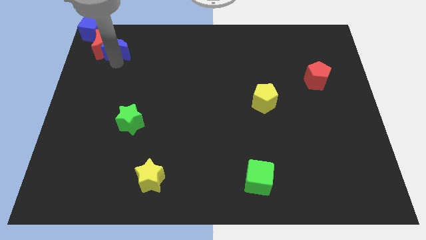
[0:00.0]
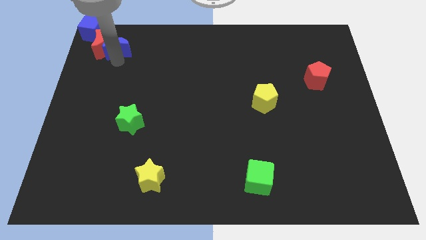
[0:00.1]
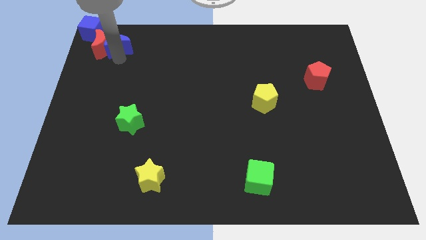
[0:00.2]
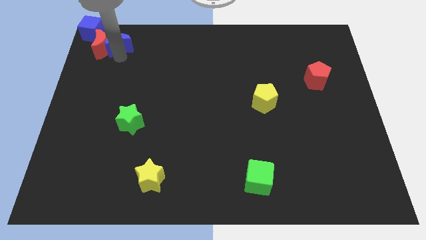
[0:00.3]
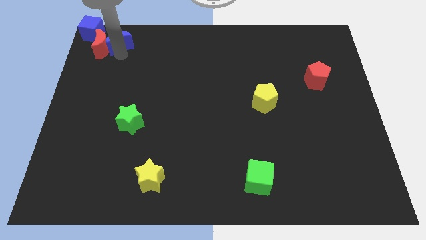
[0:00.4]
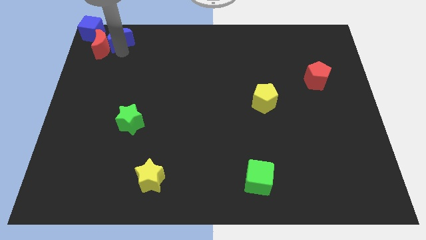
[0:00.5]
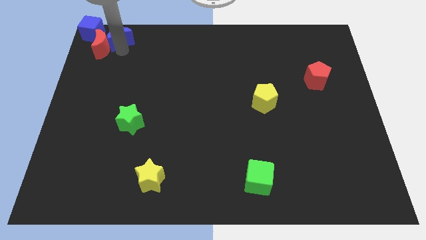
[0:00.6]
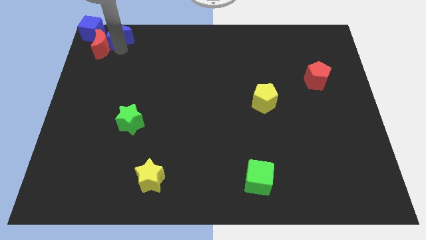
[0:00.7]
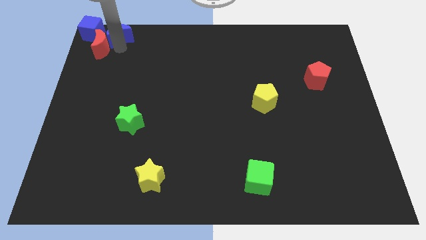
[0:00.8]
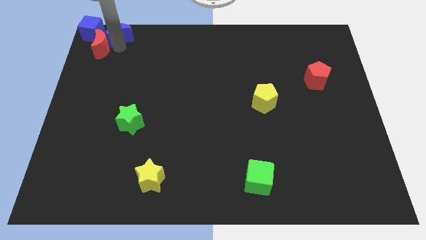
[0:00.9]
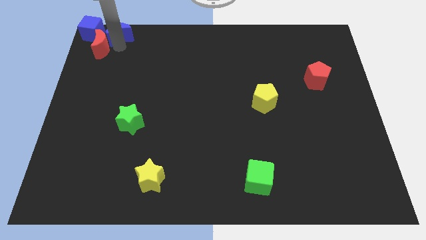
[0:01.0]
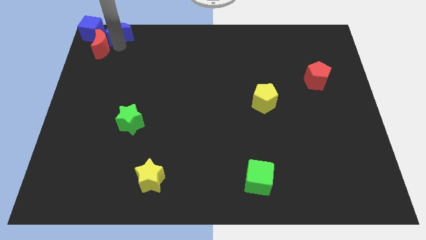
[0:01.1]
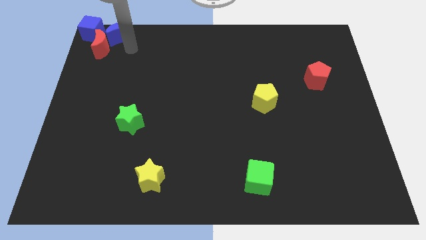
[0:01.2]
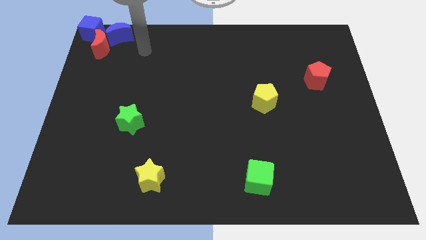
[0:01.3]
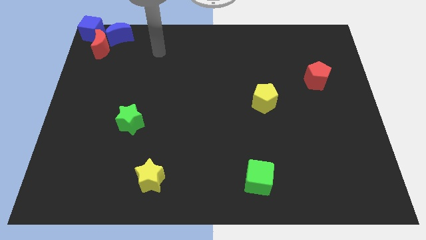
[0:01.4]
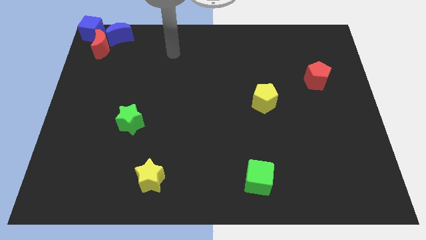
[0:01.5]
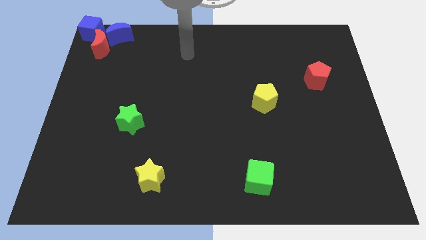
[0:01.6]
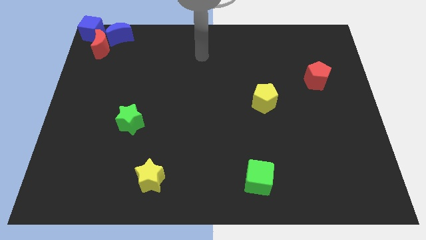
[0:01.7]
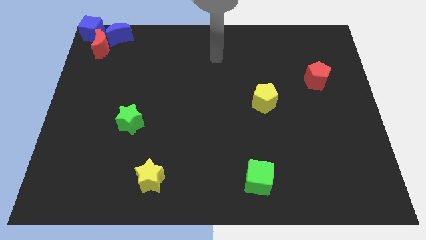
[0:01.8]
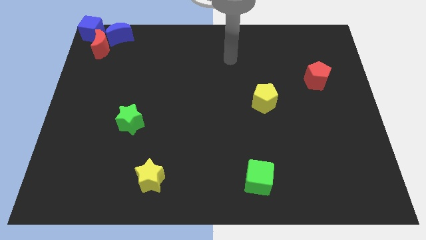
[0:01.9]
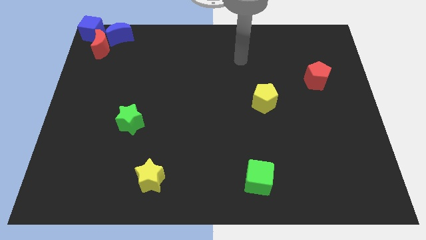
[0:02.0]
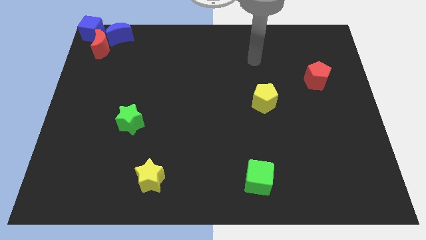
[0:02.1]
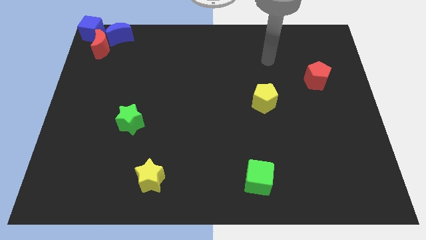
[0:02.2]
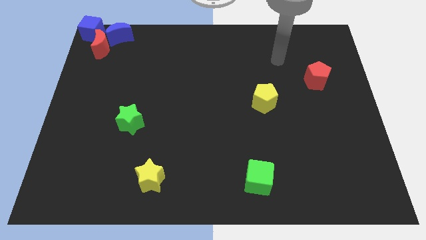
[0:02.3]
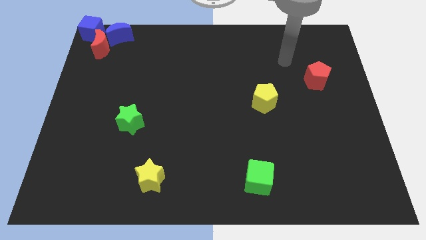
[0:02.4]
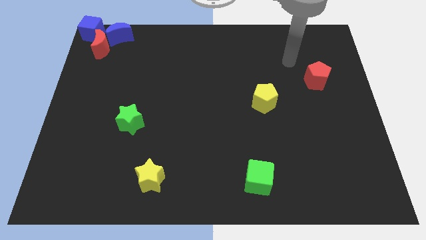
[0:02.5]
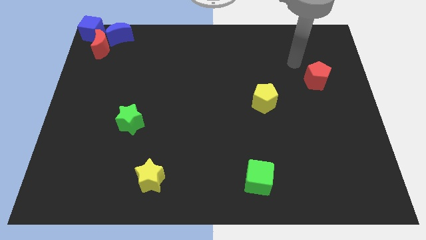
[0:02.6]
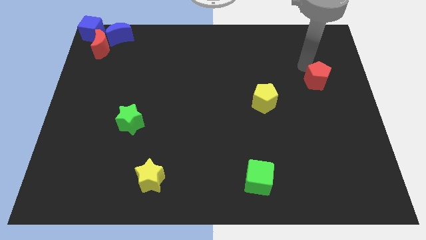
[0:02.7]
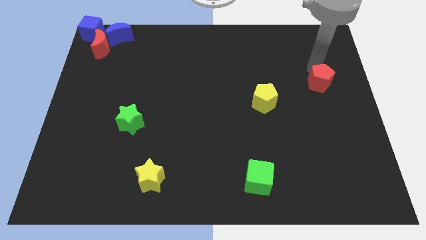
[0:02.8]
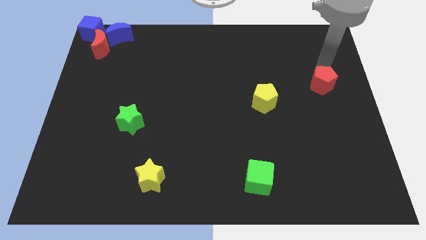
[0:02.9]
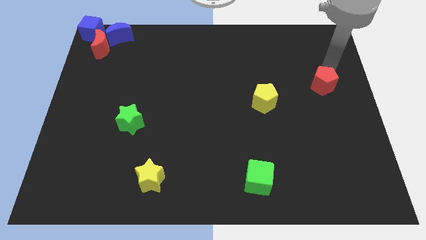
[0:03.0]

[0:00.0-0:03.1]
place your arm above red pentagon

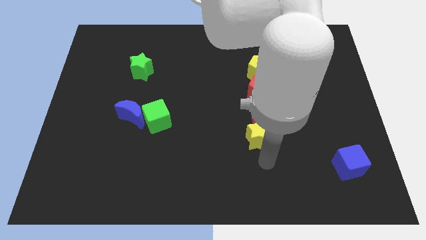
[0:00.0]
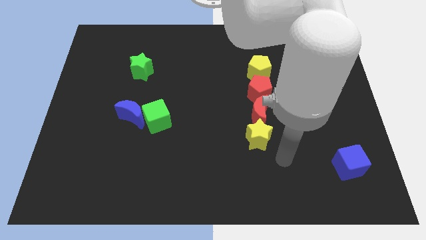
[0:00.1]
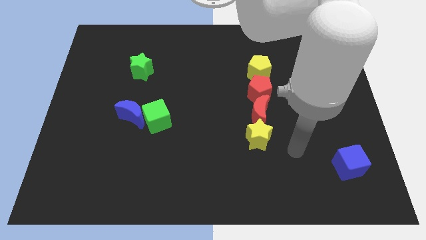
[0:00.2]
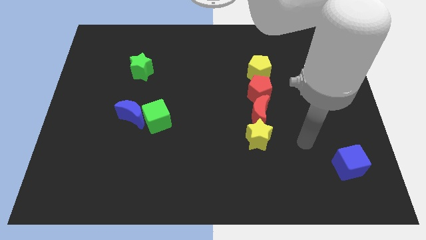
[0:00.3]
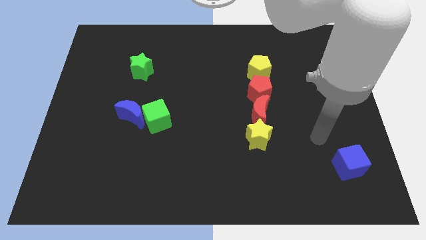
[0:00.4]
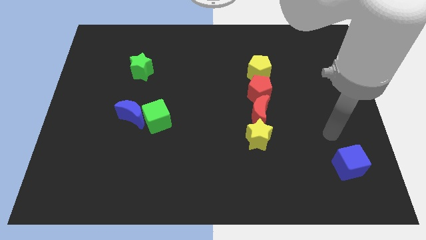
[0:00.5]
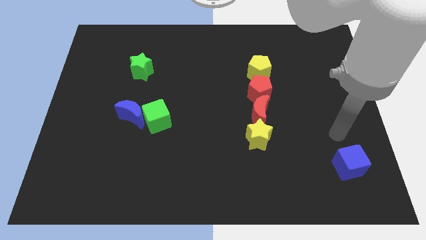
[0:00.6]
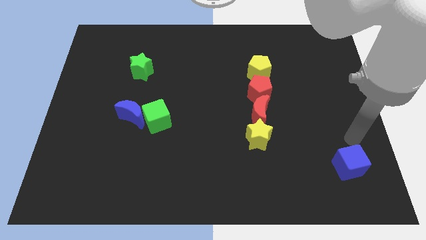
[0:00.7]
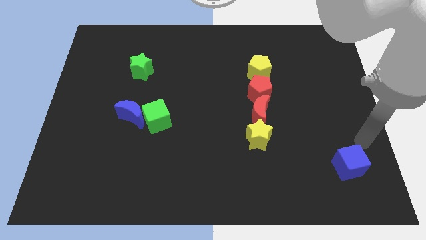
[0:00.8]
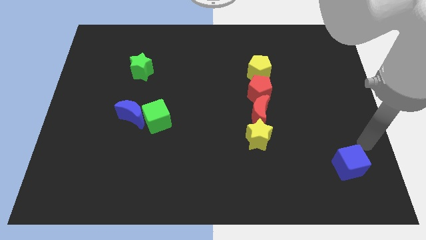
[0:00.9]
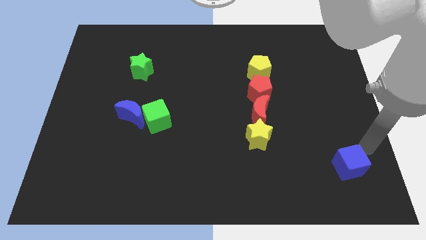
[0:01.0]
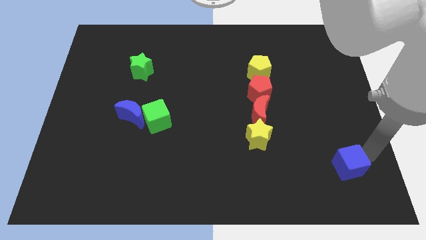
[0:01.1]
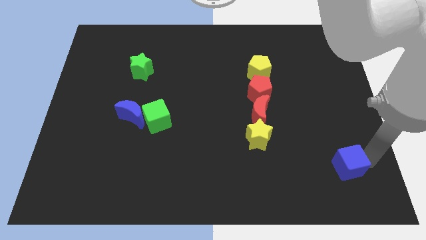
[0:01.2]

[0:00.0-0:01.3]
touch the right side of the blue cube

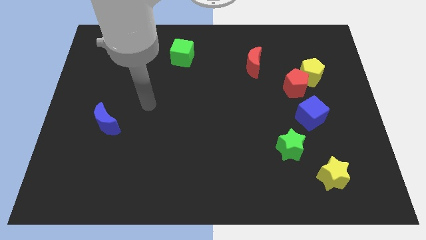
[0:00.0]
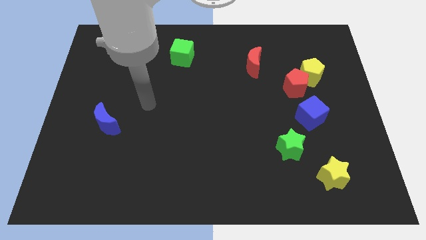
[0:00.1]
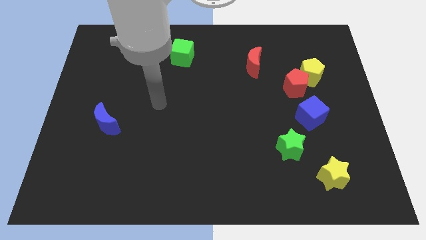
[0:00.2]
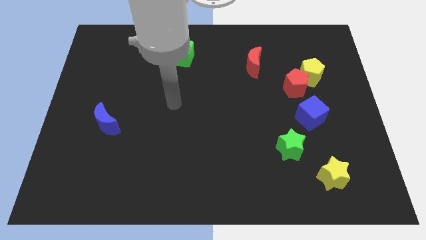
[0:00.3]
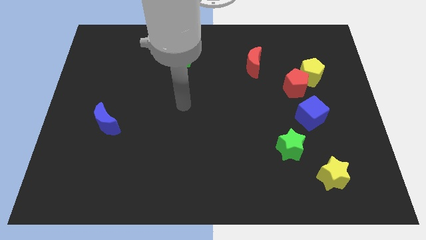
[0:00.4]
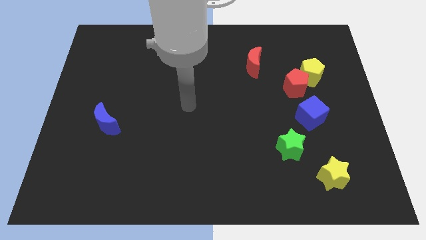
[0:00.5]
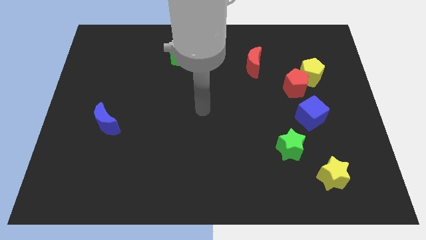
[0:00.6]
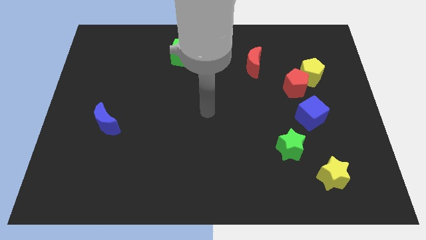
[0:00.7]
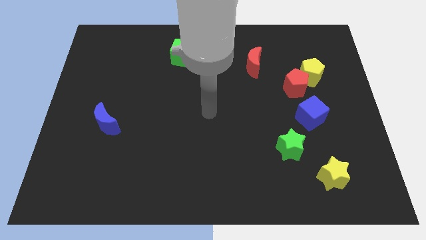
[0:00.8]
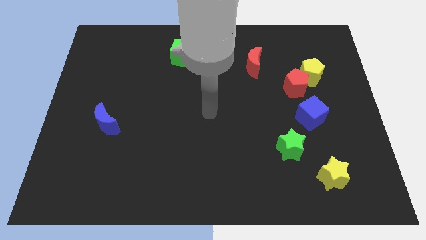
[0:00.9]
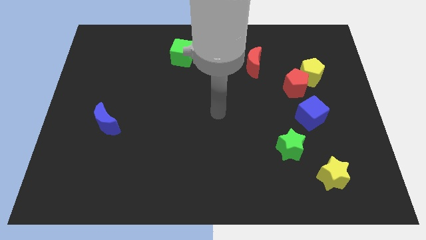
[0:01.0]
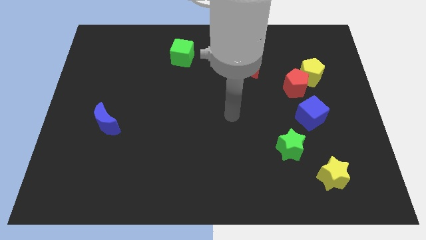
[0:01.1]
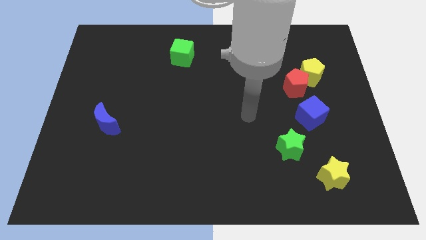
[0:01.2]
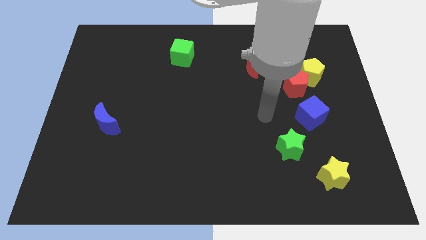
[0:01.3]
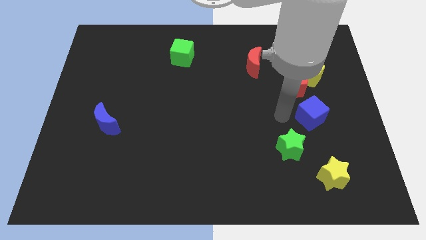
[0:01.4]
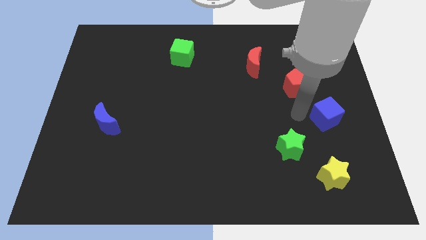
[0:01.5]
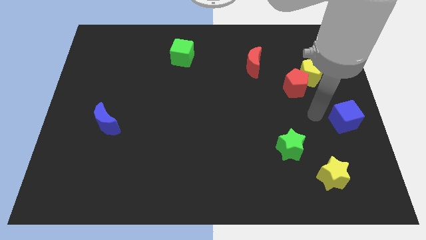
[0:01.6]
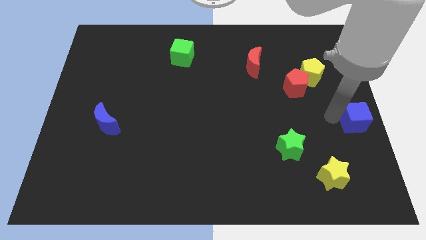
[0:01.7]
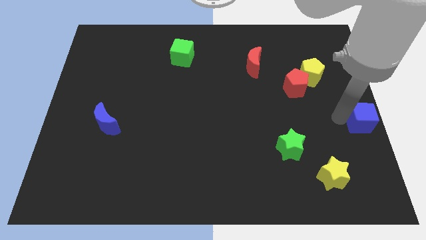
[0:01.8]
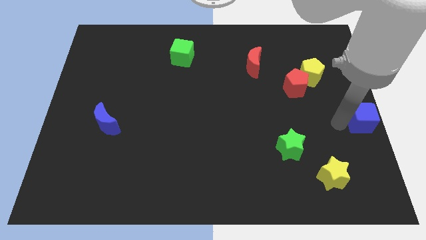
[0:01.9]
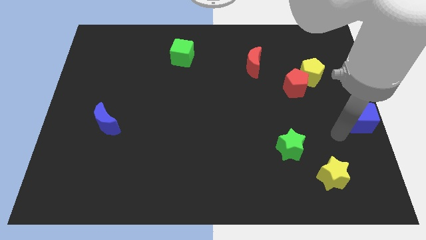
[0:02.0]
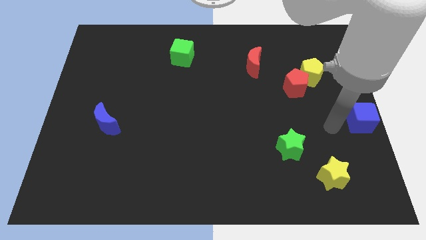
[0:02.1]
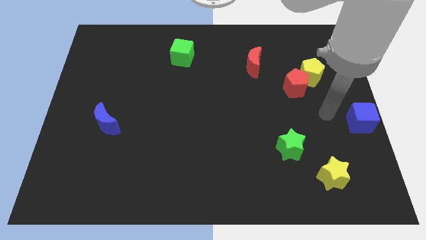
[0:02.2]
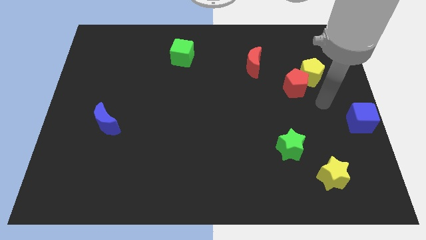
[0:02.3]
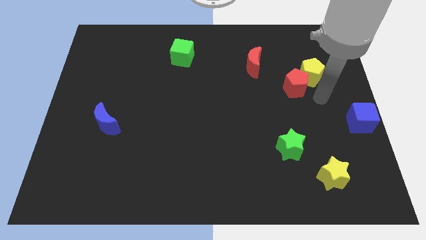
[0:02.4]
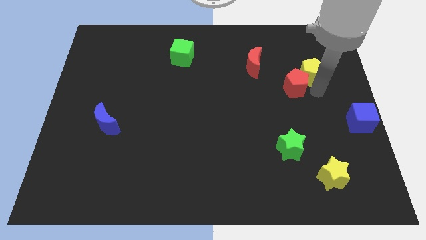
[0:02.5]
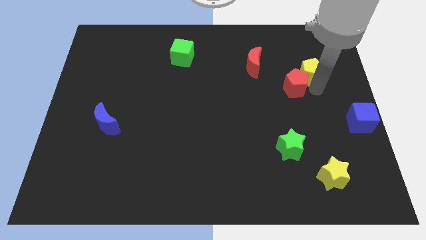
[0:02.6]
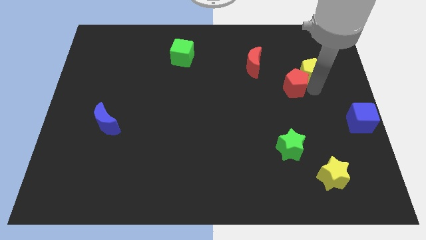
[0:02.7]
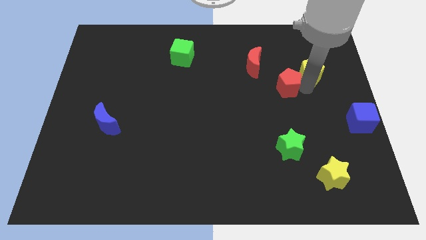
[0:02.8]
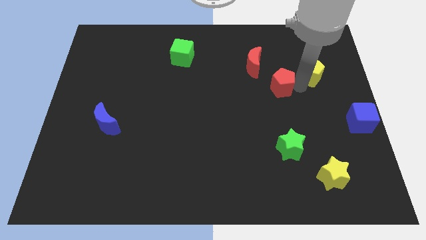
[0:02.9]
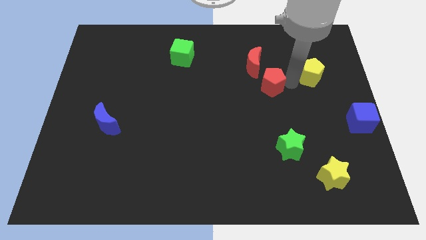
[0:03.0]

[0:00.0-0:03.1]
place the blue cube at right center of the board

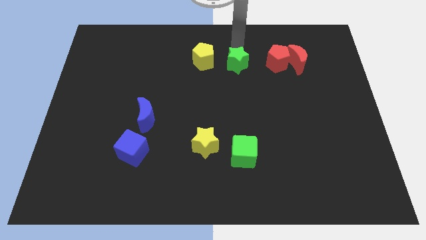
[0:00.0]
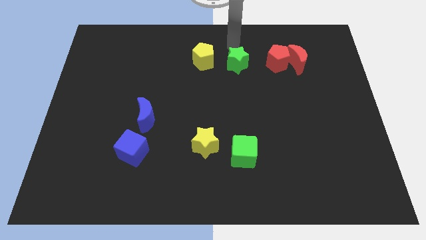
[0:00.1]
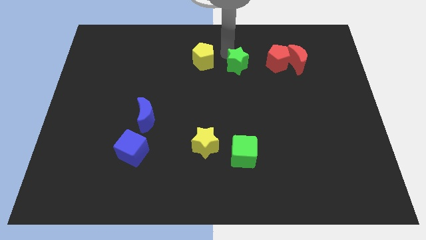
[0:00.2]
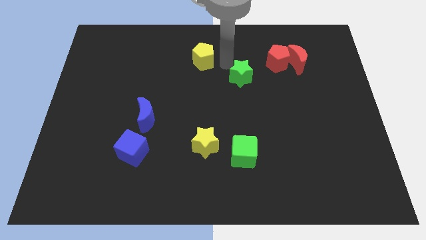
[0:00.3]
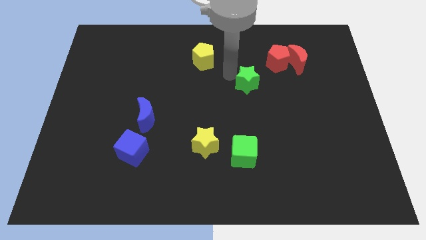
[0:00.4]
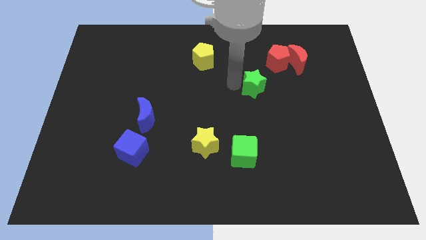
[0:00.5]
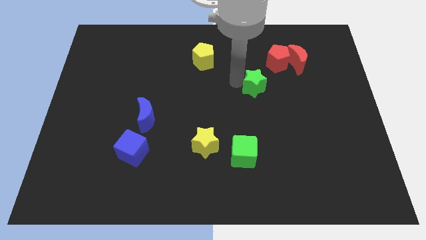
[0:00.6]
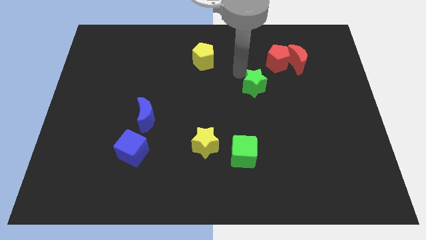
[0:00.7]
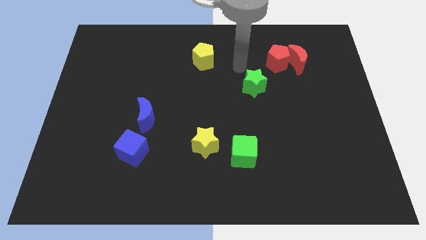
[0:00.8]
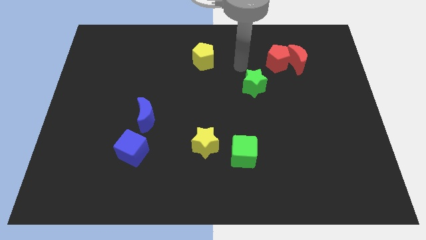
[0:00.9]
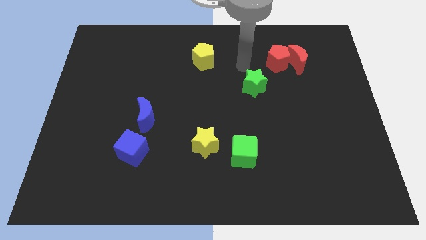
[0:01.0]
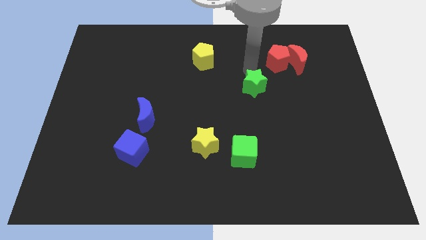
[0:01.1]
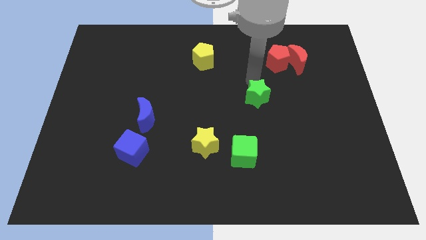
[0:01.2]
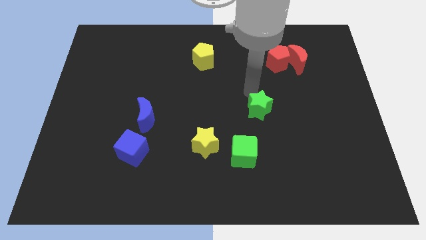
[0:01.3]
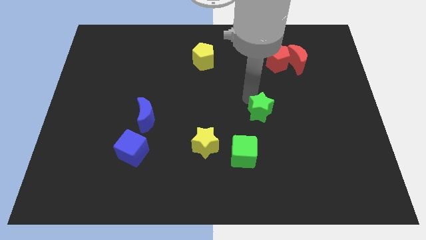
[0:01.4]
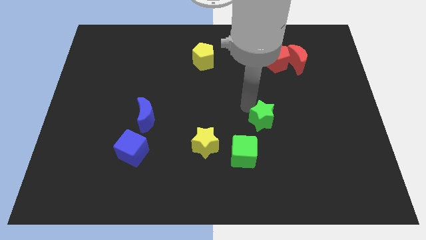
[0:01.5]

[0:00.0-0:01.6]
push the green star top right of the green cube
